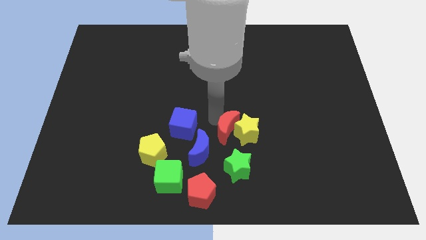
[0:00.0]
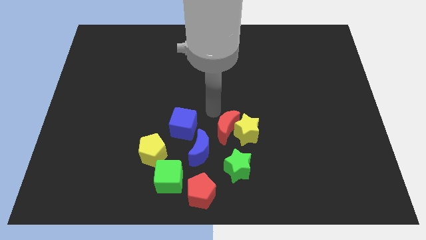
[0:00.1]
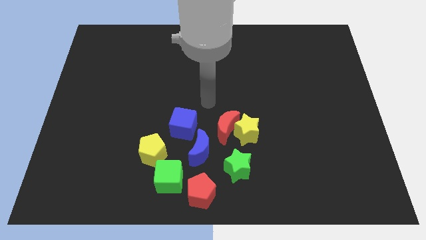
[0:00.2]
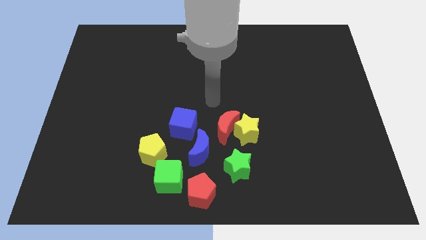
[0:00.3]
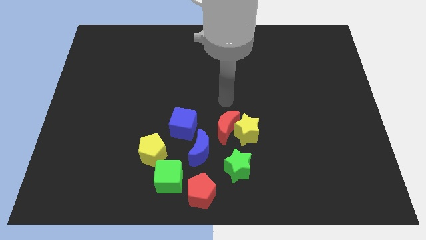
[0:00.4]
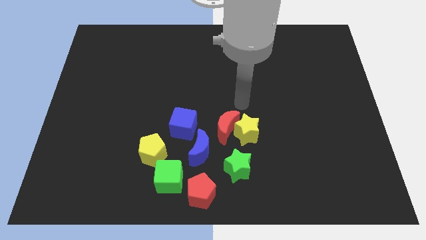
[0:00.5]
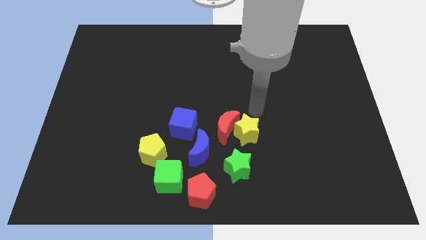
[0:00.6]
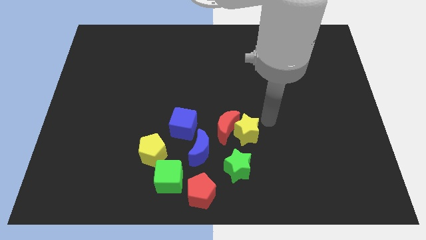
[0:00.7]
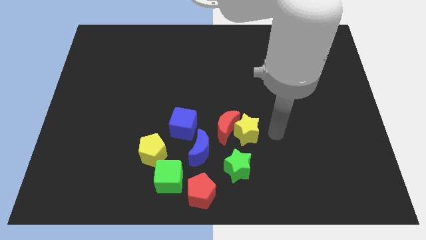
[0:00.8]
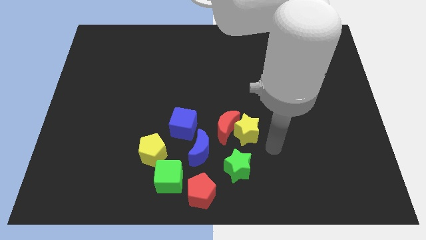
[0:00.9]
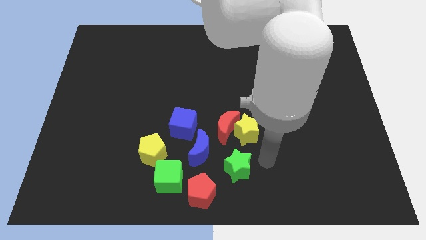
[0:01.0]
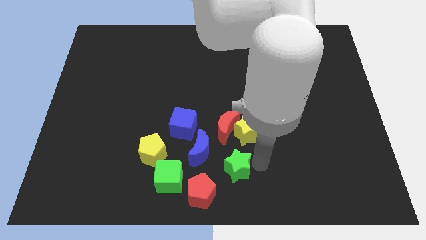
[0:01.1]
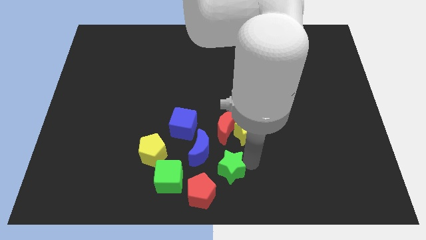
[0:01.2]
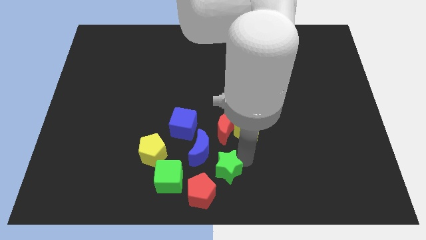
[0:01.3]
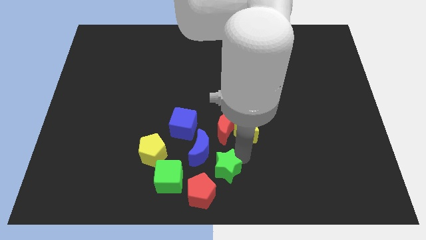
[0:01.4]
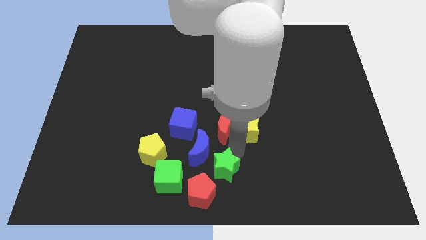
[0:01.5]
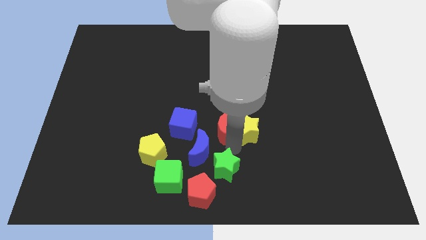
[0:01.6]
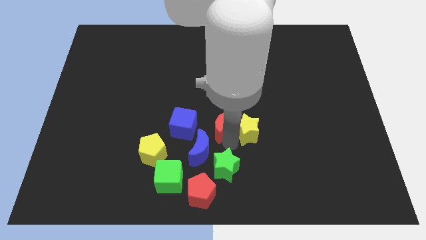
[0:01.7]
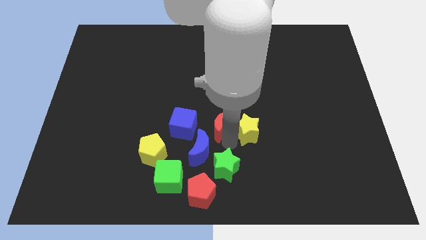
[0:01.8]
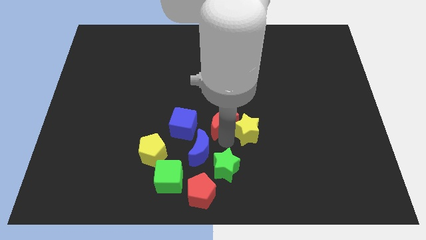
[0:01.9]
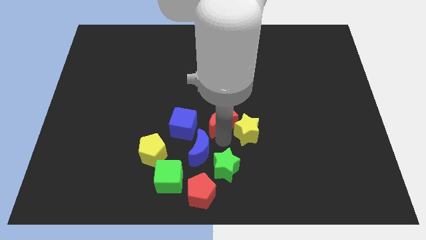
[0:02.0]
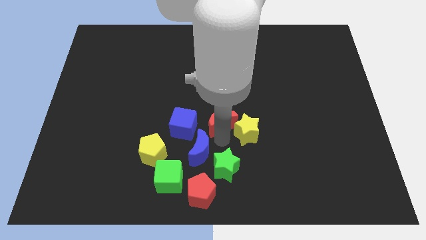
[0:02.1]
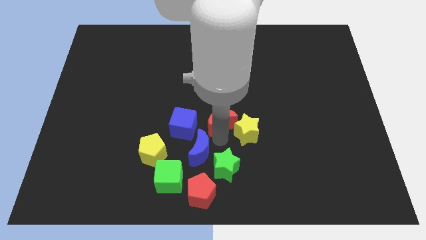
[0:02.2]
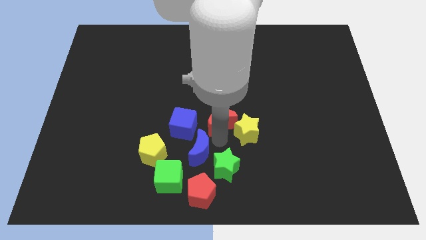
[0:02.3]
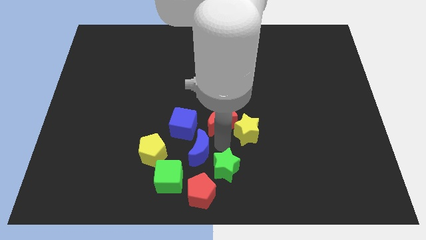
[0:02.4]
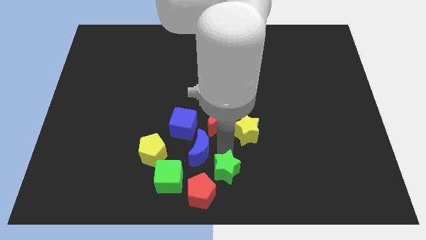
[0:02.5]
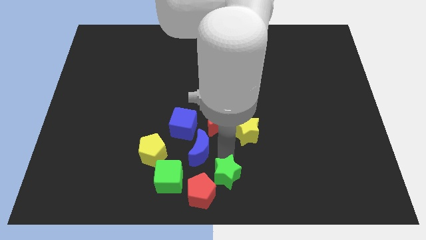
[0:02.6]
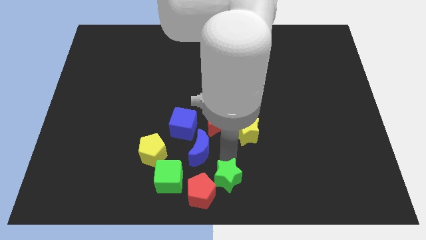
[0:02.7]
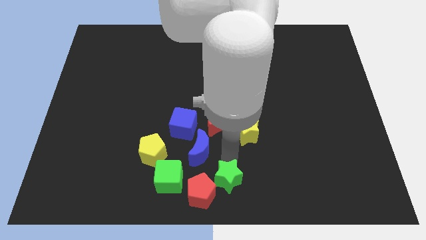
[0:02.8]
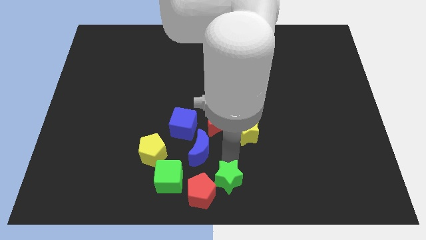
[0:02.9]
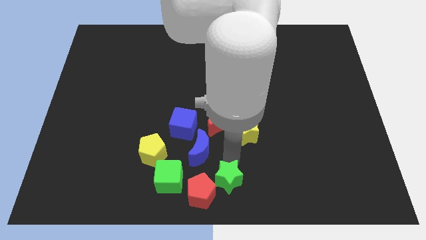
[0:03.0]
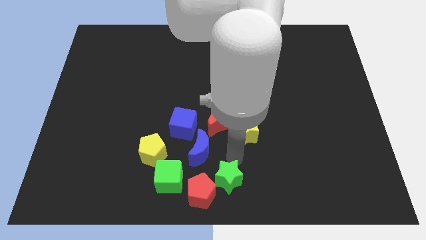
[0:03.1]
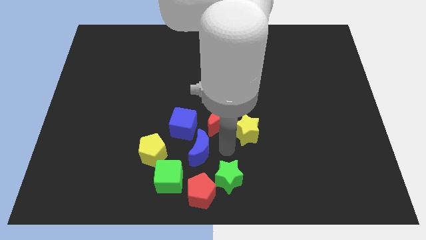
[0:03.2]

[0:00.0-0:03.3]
drag the green star slightly downwards

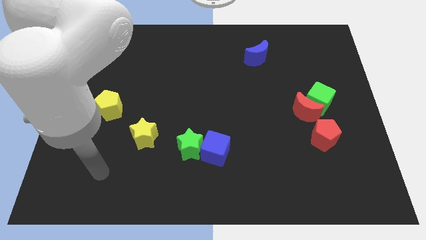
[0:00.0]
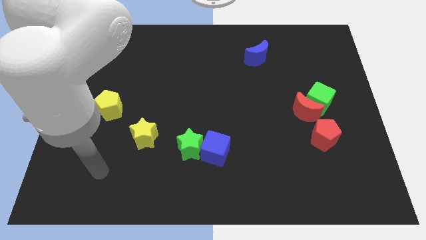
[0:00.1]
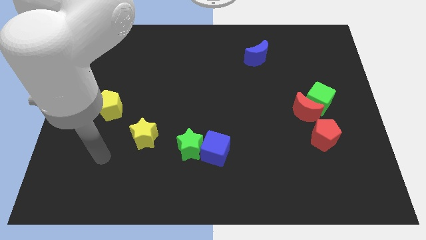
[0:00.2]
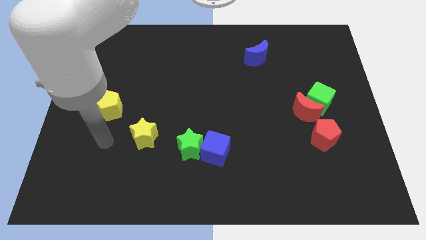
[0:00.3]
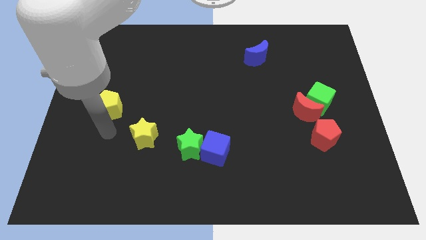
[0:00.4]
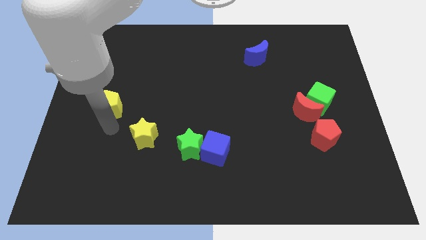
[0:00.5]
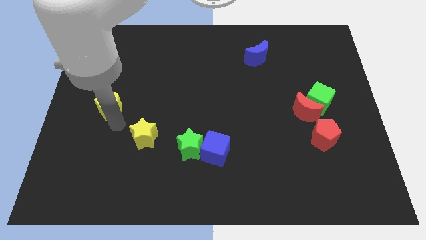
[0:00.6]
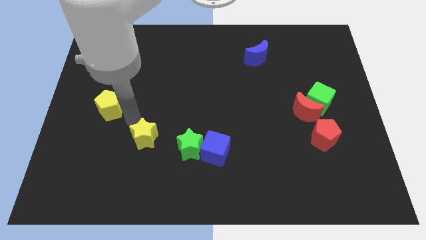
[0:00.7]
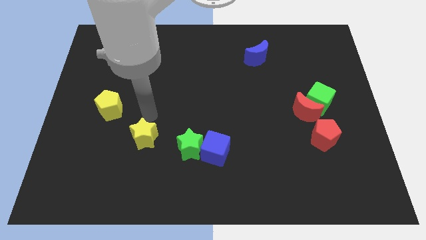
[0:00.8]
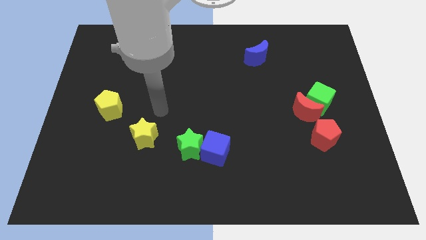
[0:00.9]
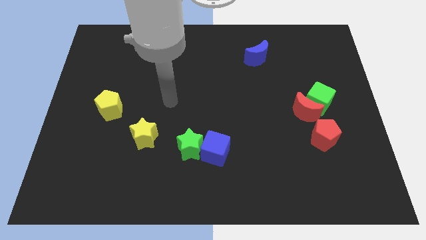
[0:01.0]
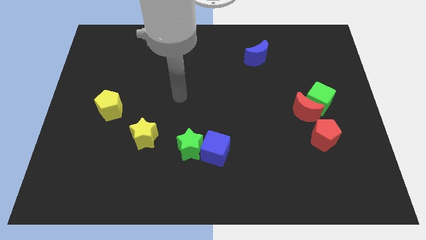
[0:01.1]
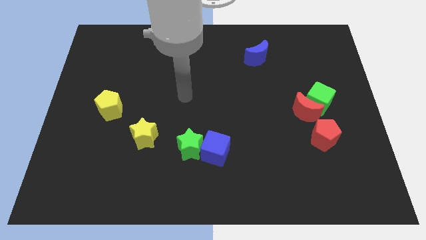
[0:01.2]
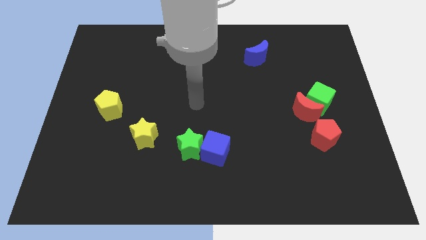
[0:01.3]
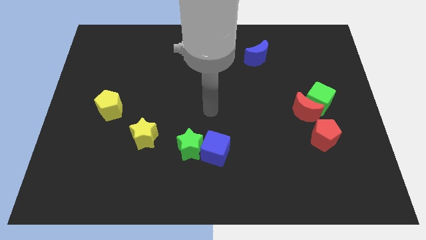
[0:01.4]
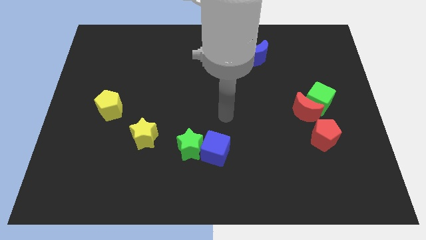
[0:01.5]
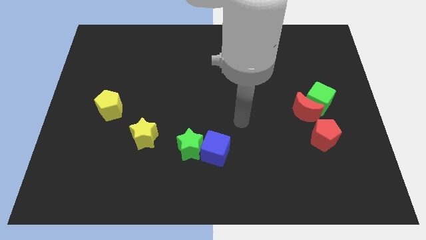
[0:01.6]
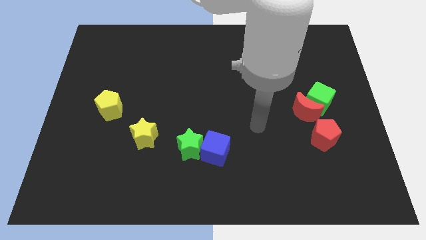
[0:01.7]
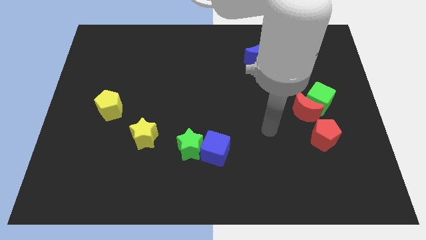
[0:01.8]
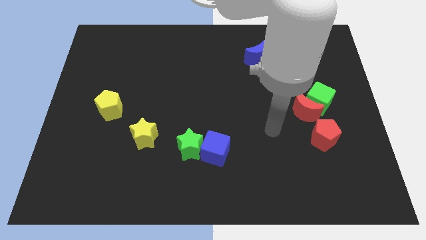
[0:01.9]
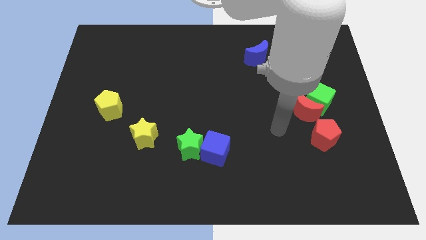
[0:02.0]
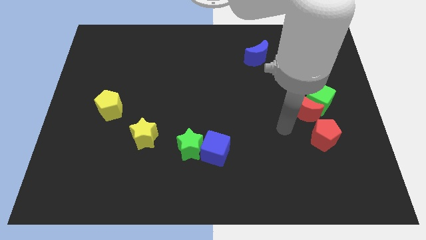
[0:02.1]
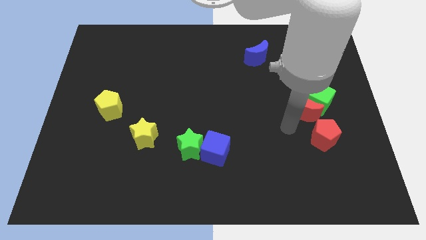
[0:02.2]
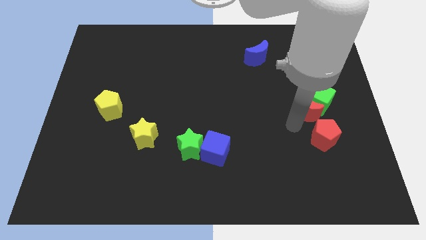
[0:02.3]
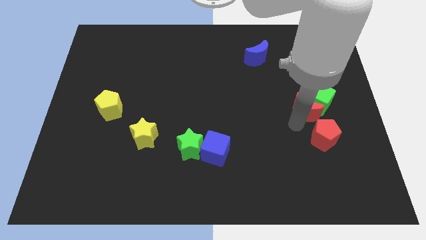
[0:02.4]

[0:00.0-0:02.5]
place the arm near the red moon

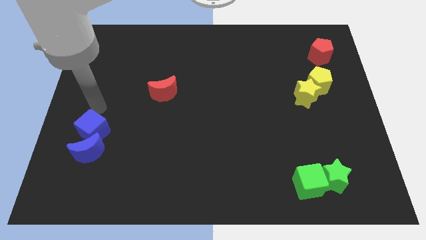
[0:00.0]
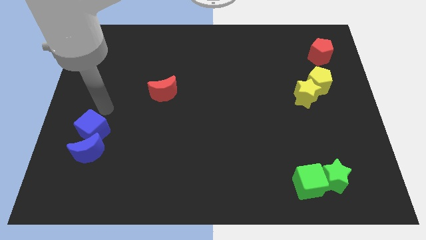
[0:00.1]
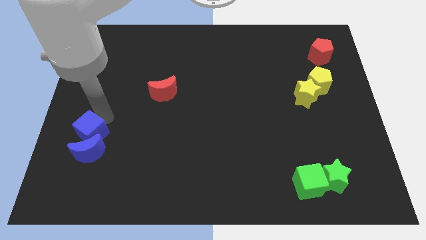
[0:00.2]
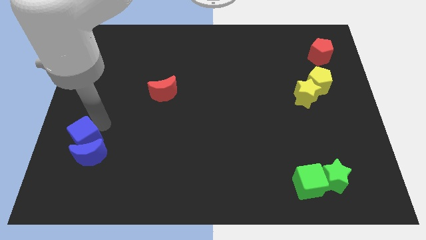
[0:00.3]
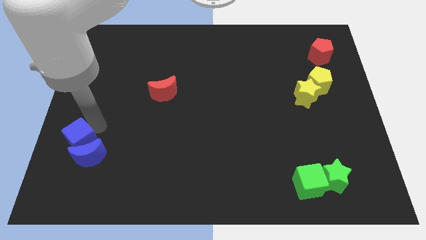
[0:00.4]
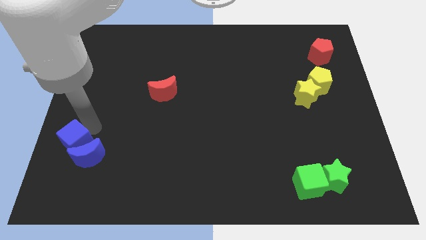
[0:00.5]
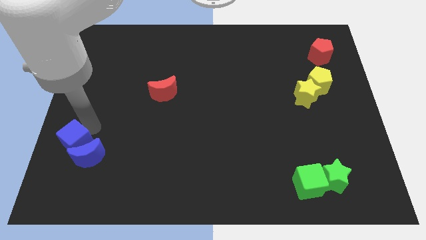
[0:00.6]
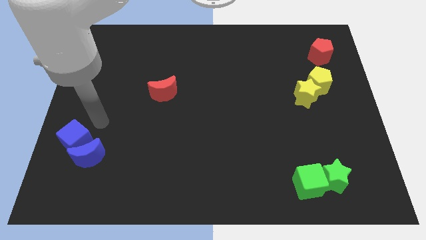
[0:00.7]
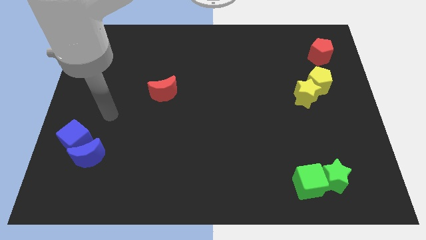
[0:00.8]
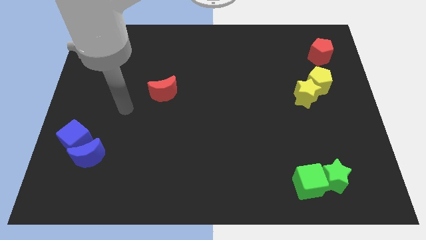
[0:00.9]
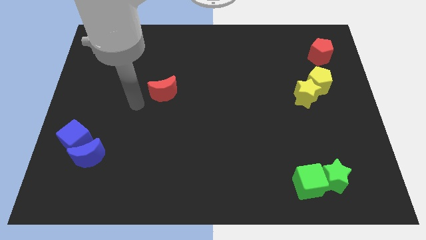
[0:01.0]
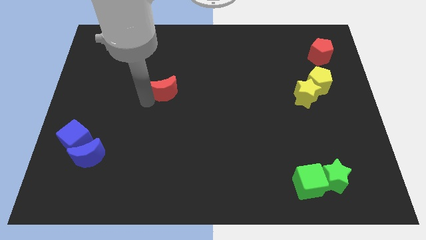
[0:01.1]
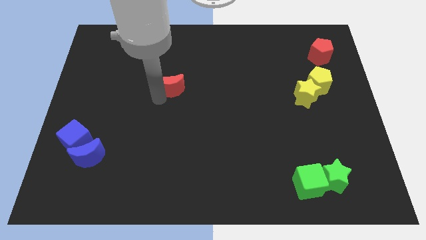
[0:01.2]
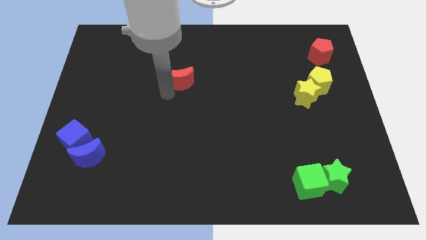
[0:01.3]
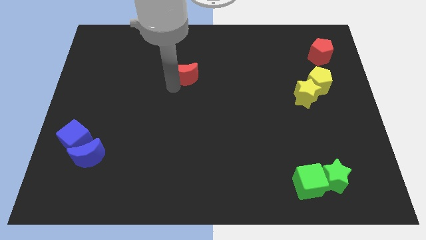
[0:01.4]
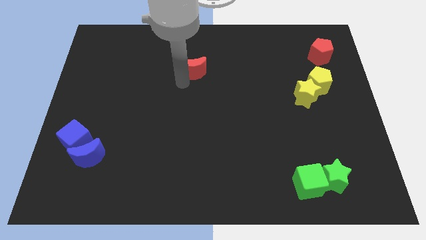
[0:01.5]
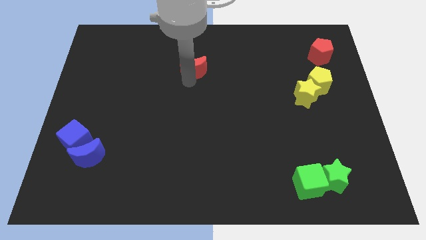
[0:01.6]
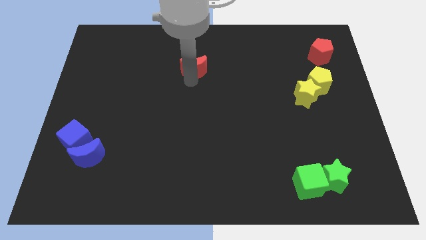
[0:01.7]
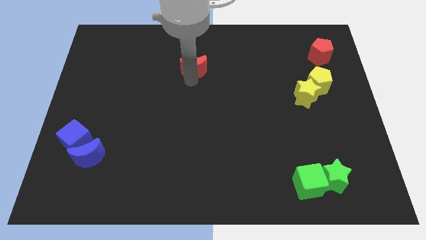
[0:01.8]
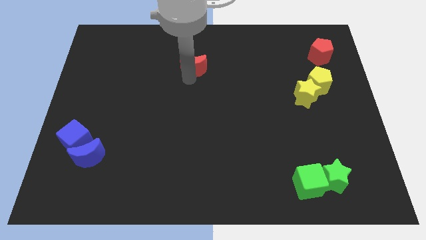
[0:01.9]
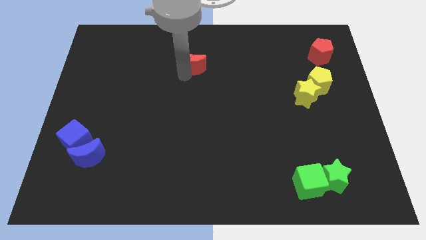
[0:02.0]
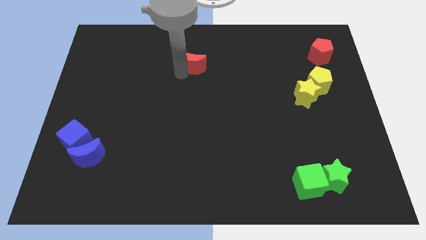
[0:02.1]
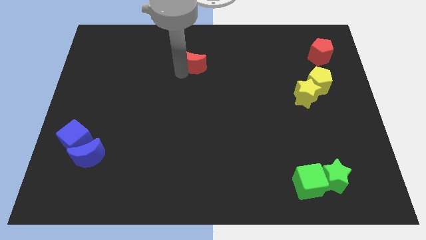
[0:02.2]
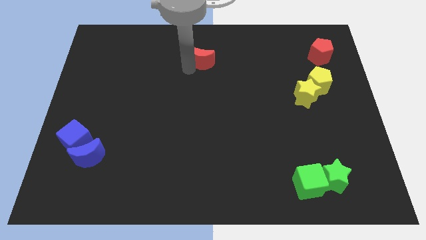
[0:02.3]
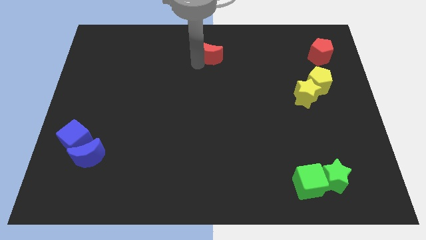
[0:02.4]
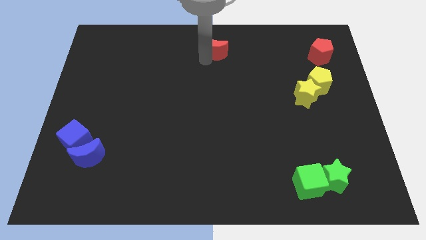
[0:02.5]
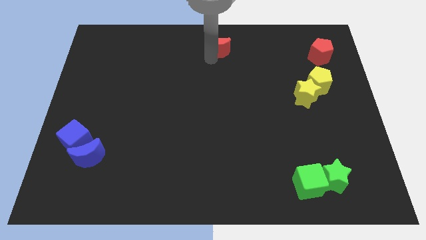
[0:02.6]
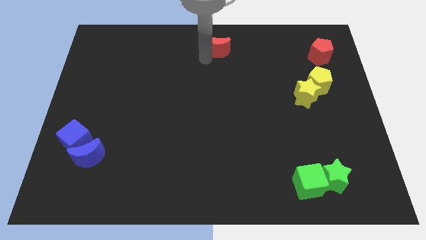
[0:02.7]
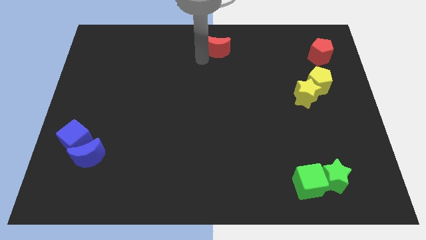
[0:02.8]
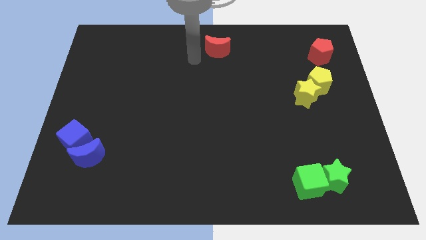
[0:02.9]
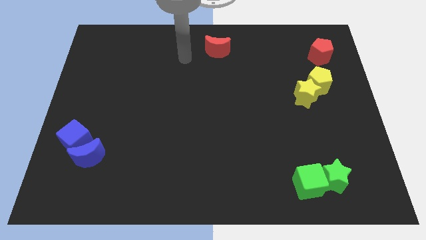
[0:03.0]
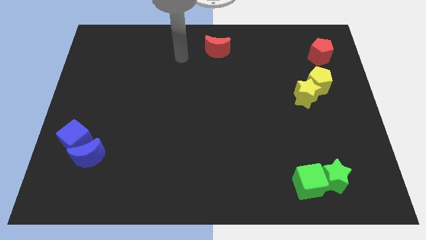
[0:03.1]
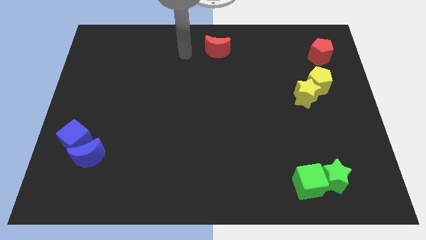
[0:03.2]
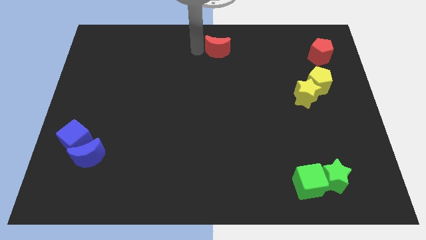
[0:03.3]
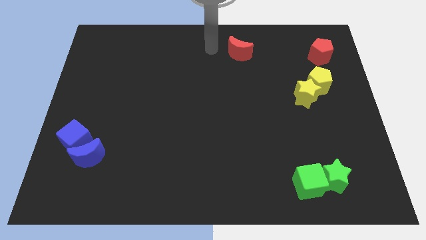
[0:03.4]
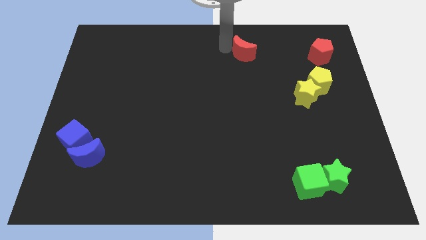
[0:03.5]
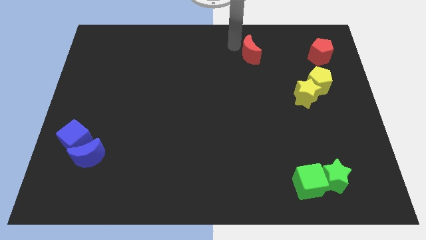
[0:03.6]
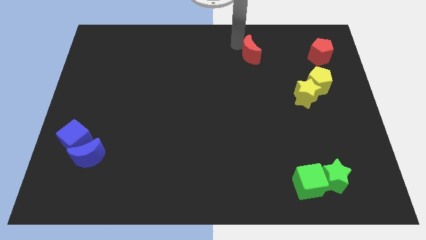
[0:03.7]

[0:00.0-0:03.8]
slide the red moon towards the red pentagon
